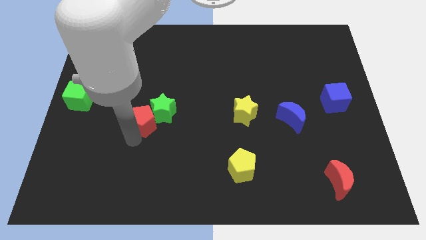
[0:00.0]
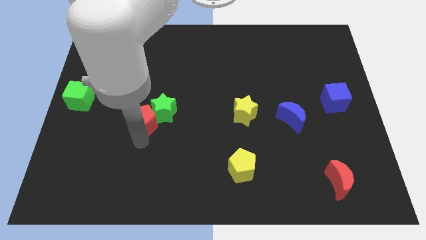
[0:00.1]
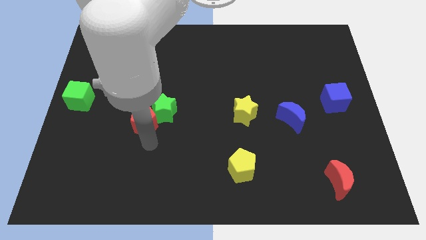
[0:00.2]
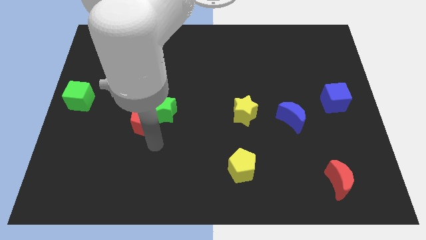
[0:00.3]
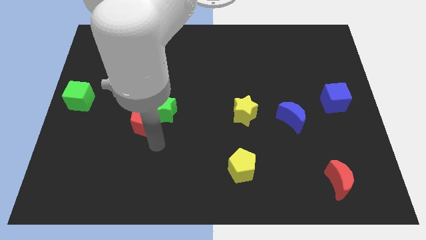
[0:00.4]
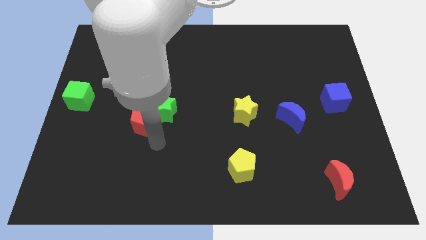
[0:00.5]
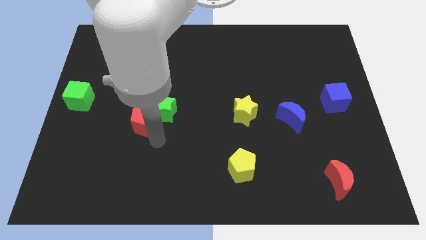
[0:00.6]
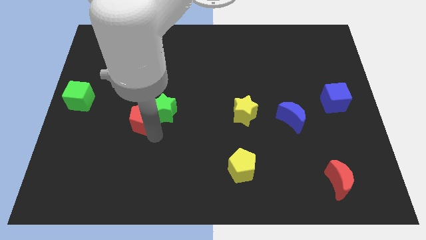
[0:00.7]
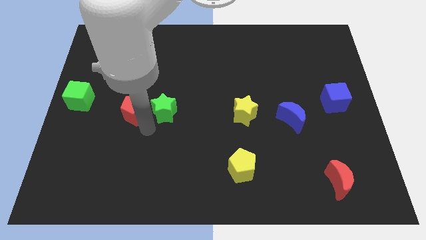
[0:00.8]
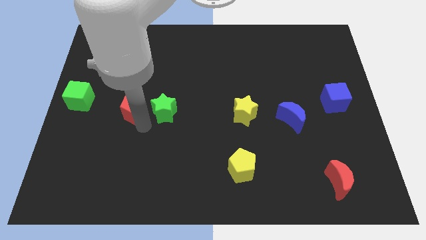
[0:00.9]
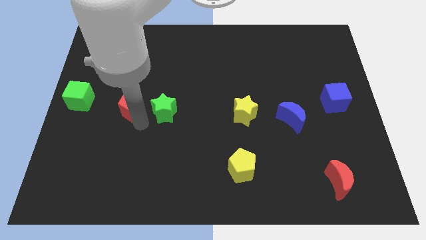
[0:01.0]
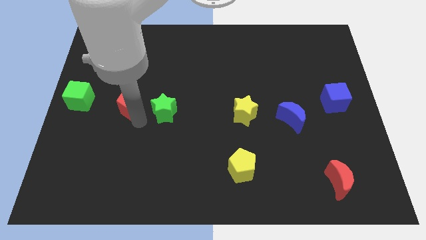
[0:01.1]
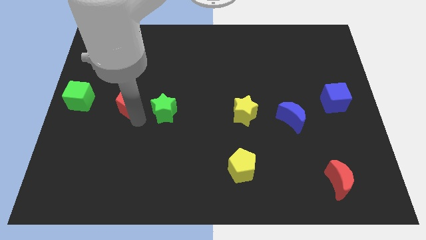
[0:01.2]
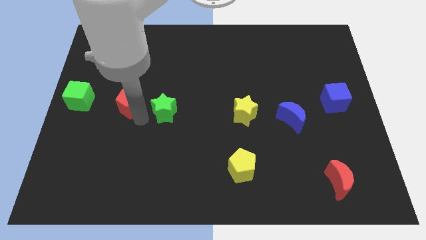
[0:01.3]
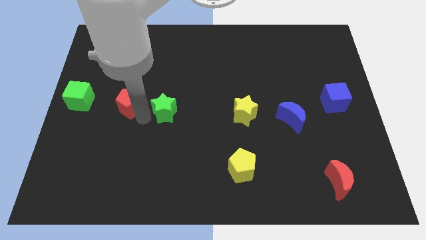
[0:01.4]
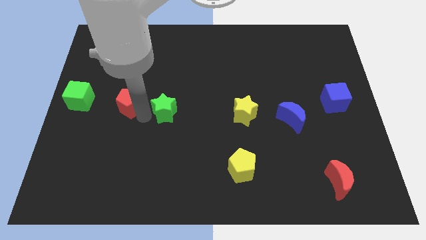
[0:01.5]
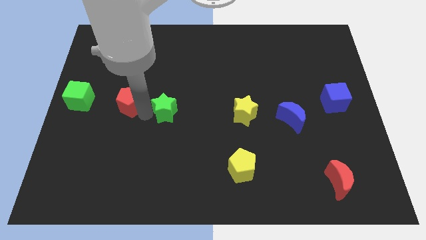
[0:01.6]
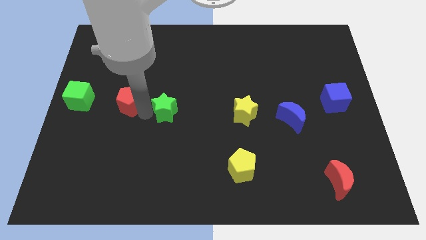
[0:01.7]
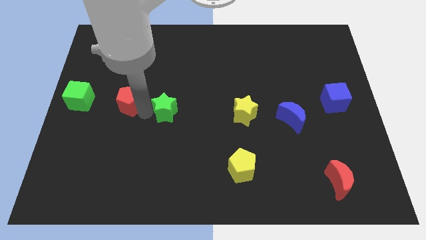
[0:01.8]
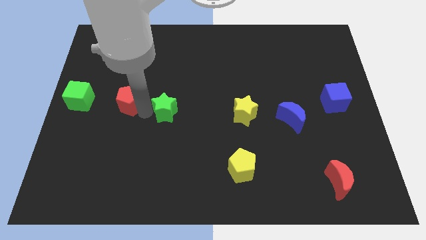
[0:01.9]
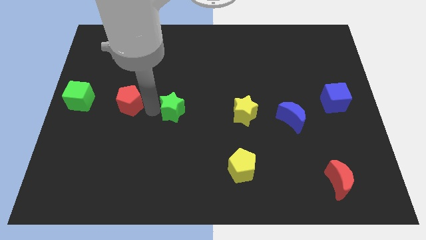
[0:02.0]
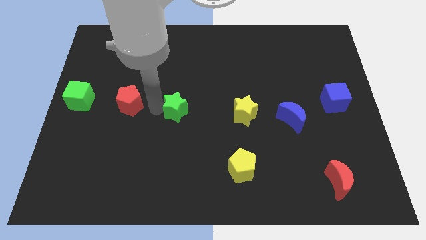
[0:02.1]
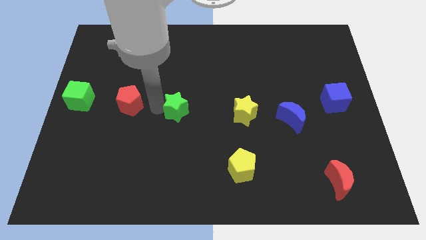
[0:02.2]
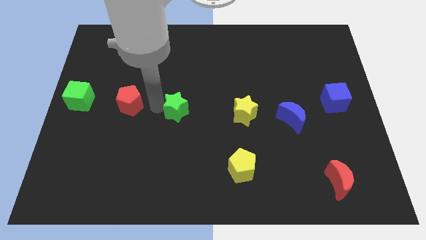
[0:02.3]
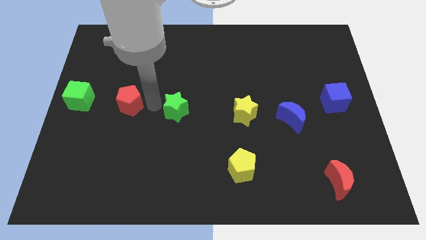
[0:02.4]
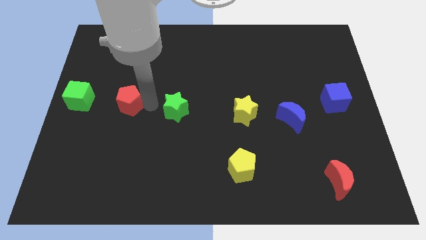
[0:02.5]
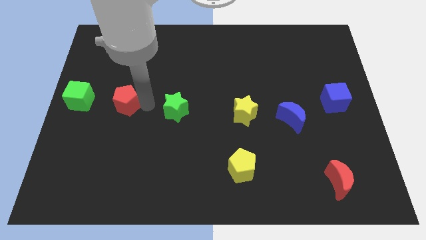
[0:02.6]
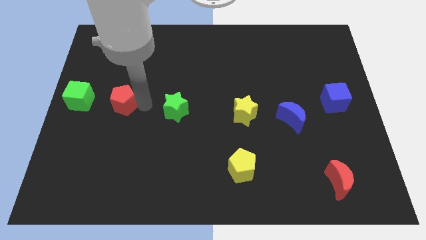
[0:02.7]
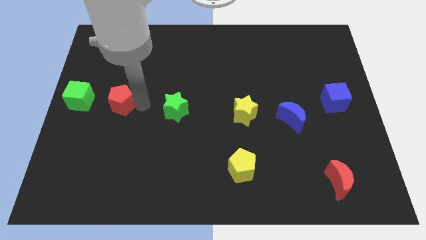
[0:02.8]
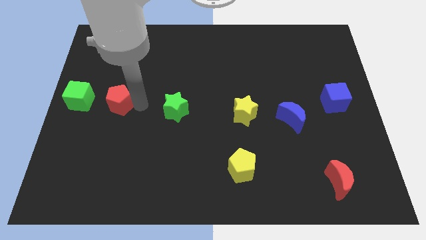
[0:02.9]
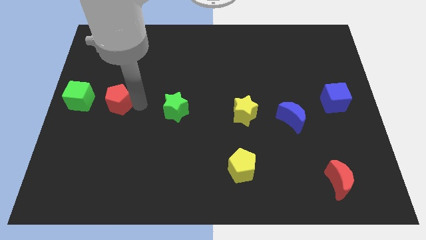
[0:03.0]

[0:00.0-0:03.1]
separate red pentagon from green star

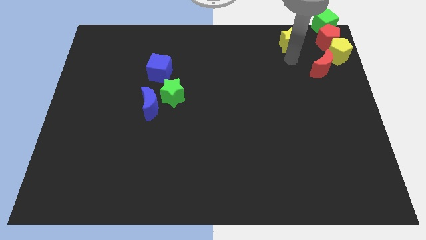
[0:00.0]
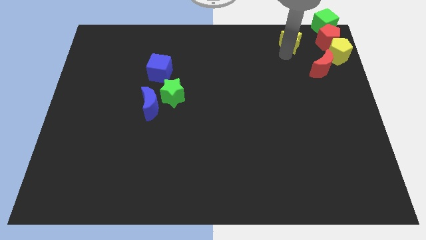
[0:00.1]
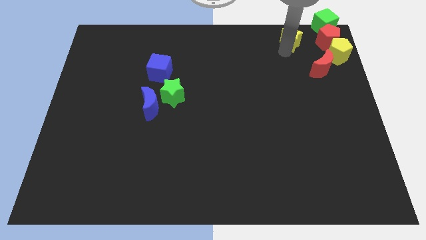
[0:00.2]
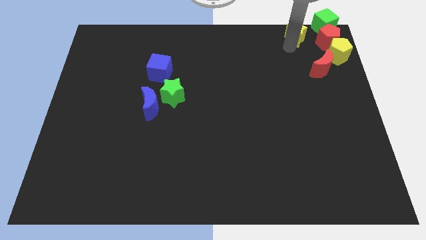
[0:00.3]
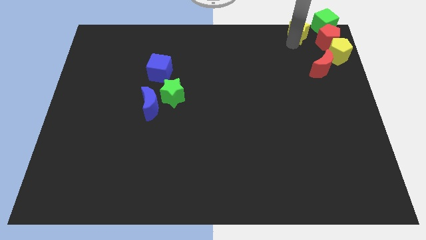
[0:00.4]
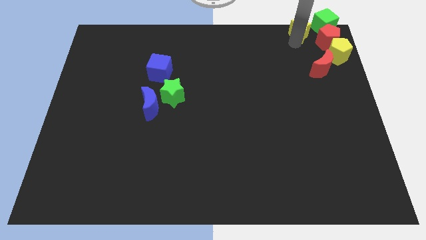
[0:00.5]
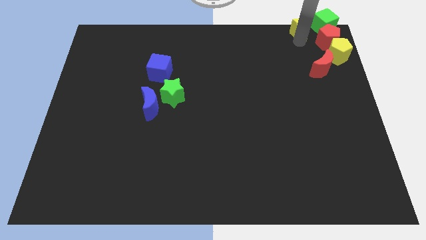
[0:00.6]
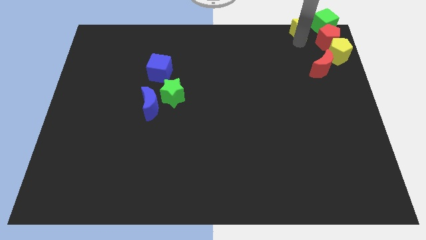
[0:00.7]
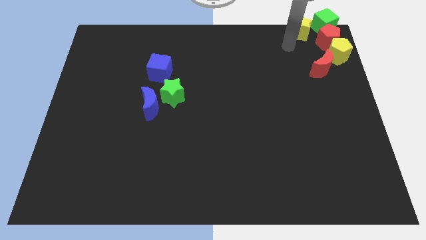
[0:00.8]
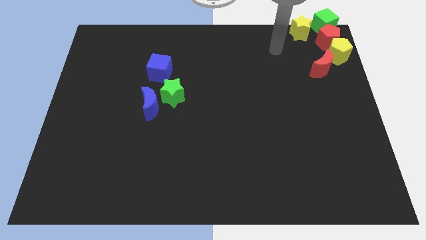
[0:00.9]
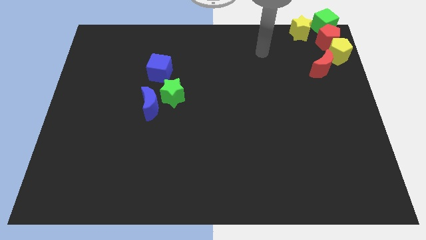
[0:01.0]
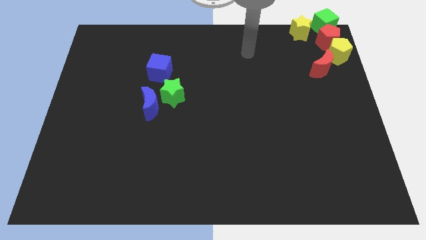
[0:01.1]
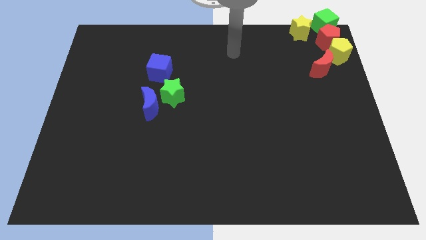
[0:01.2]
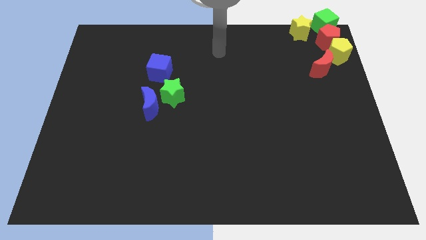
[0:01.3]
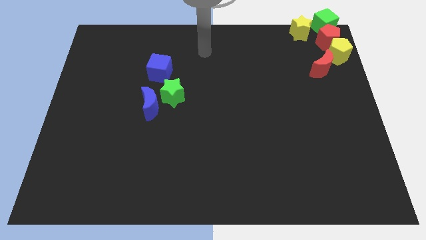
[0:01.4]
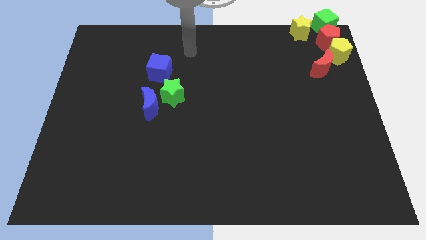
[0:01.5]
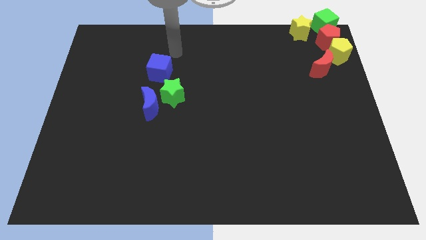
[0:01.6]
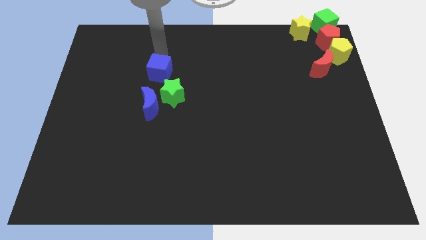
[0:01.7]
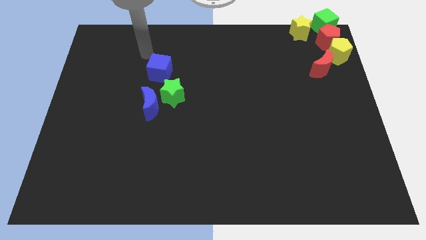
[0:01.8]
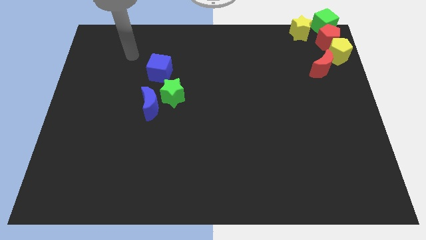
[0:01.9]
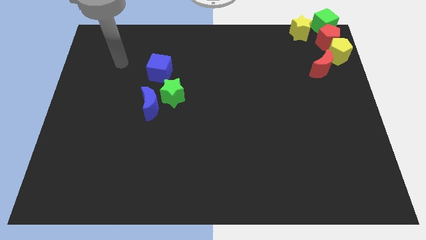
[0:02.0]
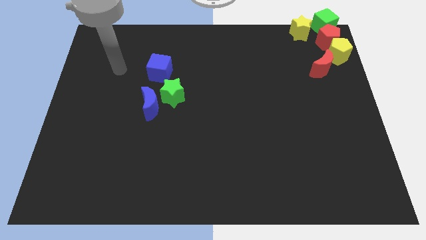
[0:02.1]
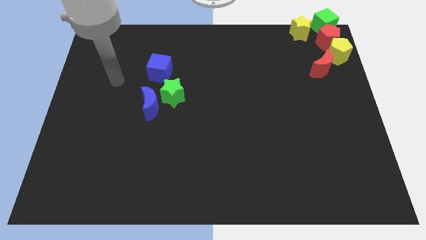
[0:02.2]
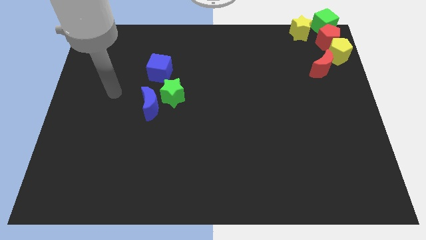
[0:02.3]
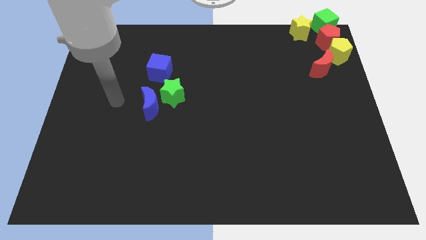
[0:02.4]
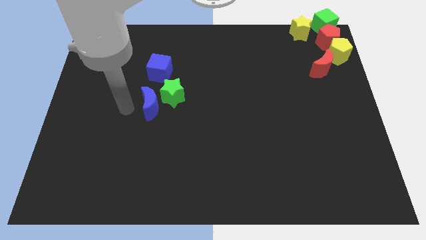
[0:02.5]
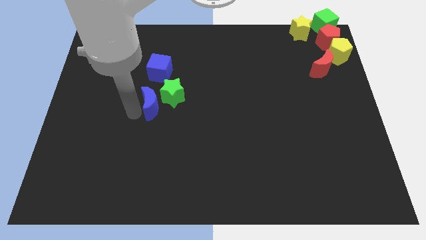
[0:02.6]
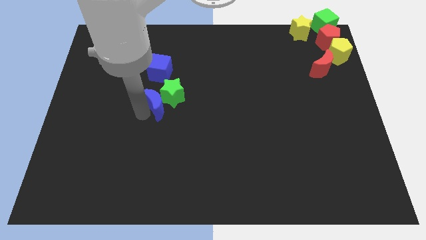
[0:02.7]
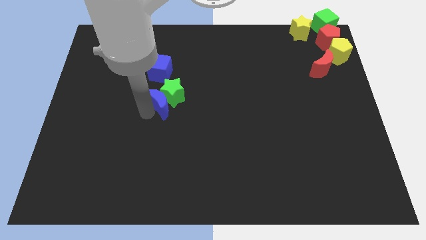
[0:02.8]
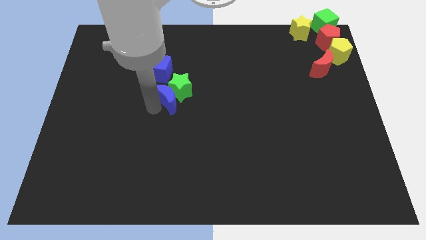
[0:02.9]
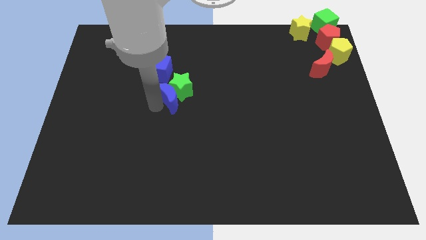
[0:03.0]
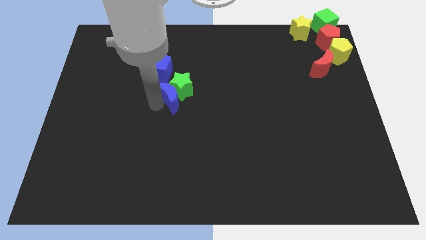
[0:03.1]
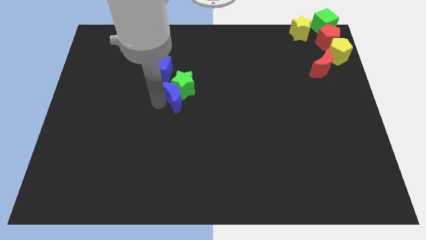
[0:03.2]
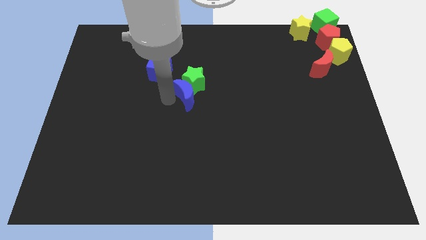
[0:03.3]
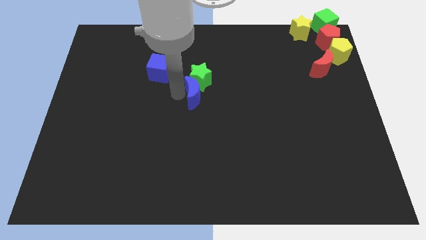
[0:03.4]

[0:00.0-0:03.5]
place green star beside blue cube

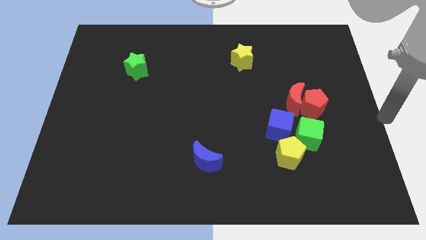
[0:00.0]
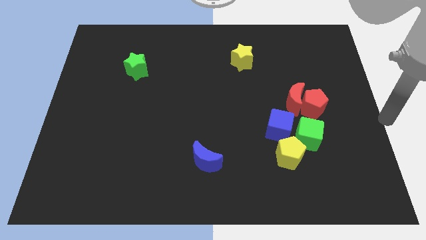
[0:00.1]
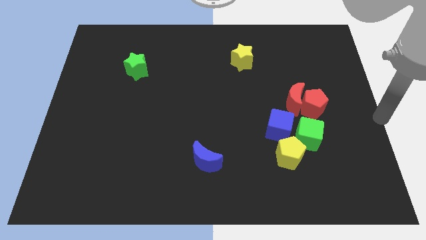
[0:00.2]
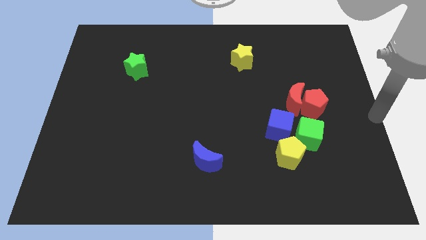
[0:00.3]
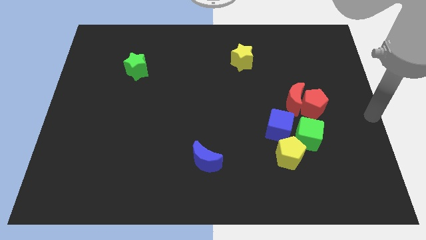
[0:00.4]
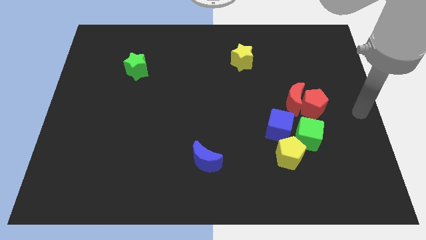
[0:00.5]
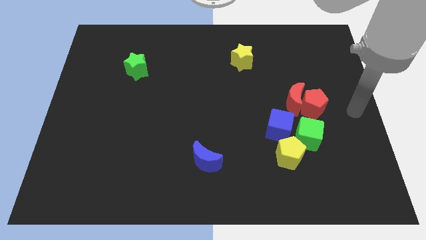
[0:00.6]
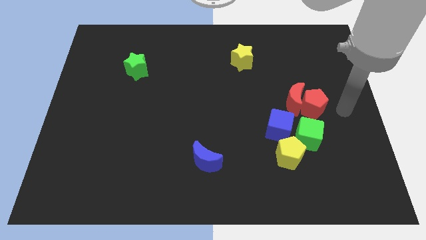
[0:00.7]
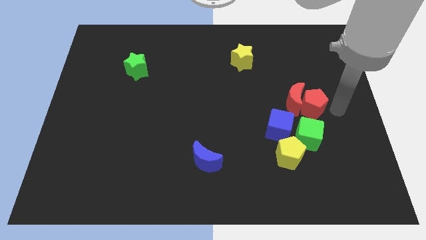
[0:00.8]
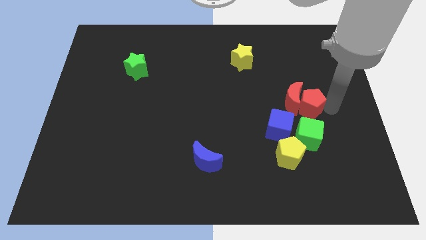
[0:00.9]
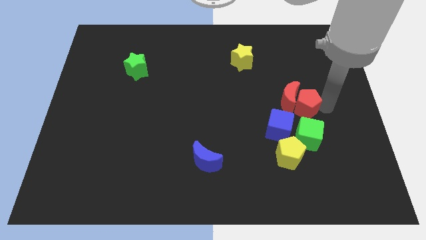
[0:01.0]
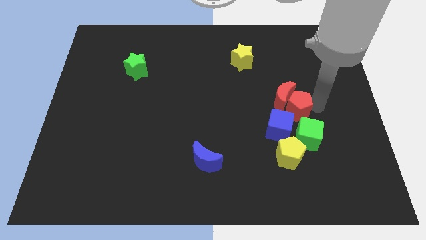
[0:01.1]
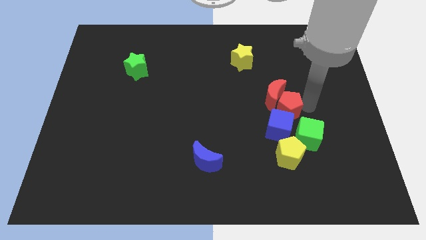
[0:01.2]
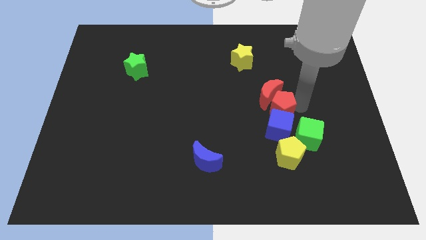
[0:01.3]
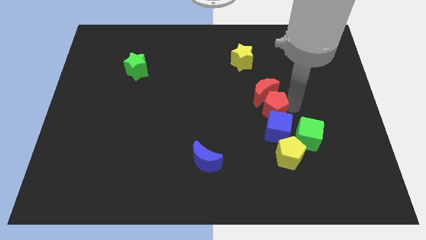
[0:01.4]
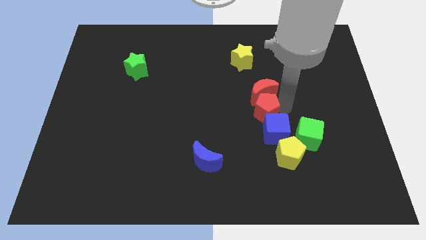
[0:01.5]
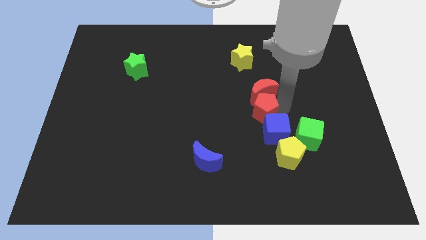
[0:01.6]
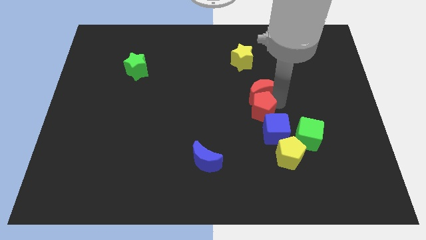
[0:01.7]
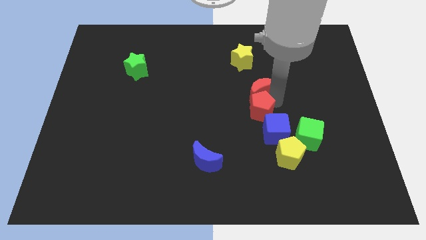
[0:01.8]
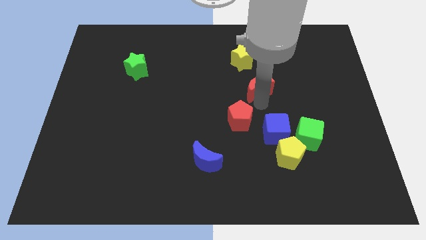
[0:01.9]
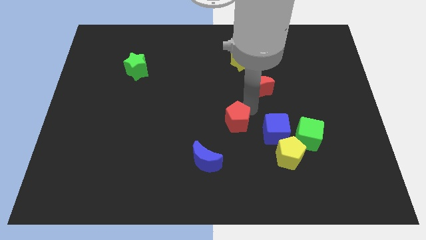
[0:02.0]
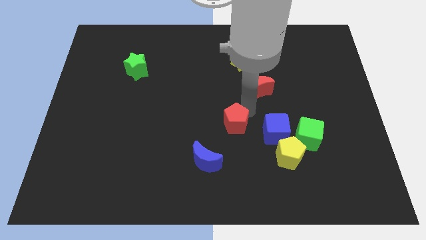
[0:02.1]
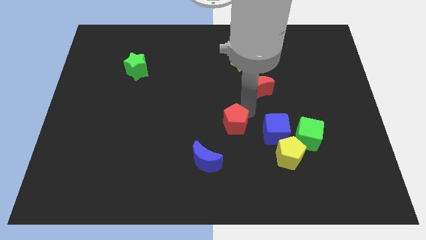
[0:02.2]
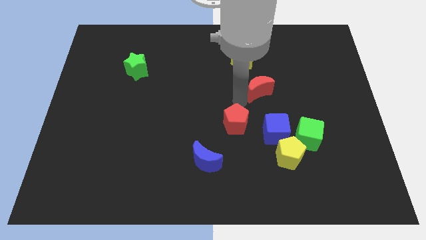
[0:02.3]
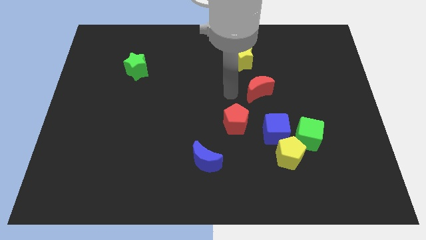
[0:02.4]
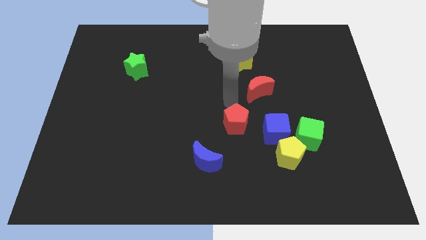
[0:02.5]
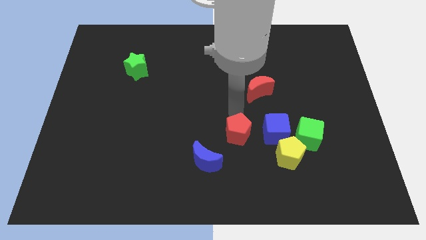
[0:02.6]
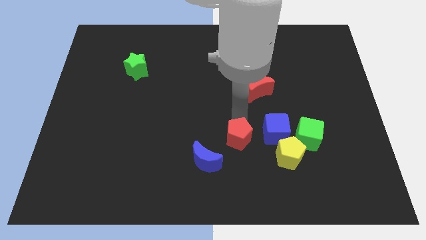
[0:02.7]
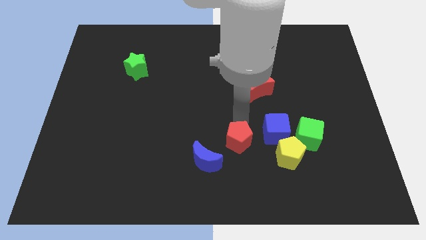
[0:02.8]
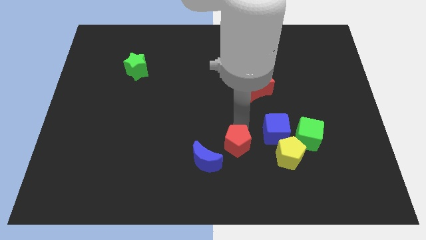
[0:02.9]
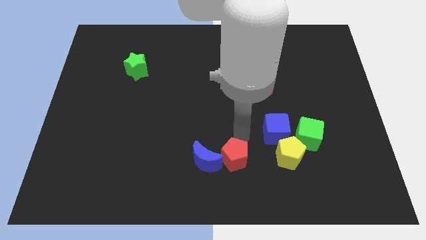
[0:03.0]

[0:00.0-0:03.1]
place the red pentagon left to the yellow pentagon
